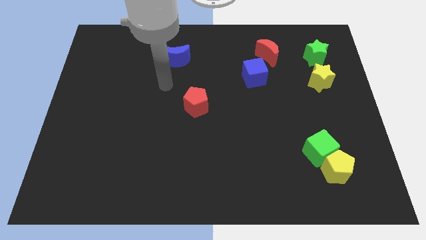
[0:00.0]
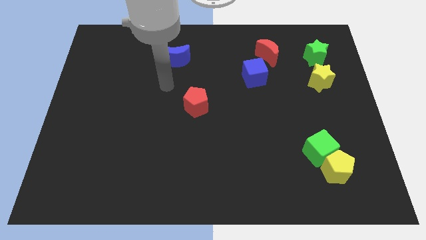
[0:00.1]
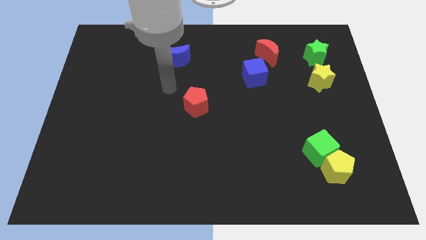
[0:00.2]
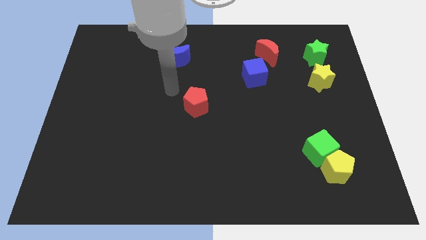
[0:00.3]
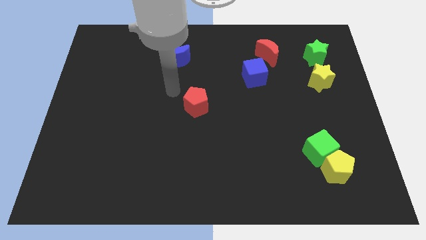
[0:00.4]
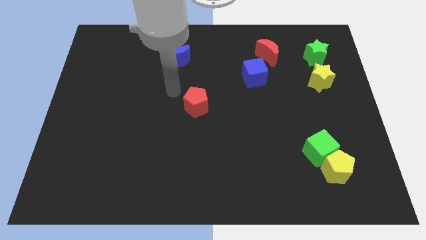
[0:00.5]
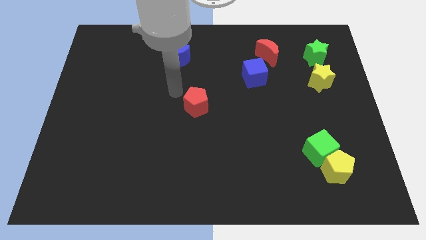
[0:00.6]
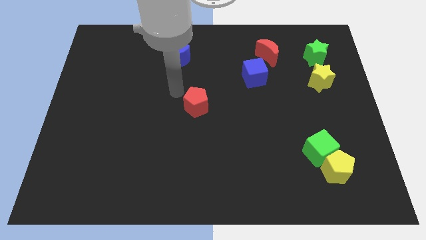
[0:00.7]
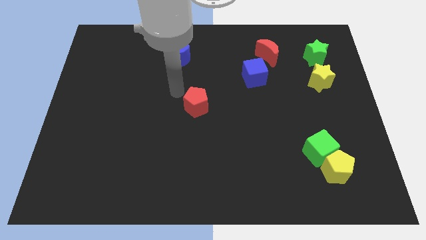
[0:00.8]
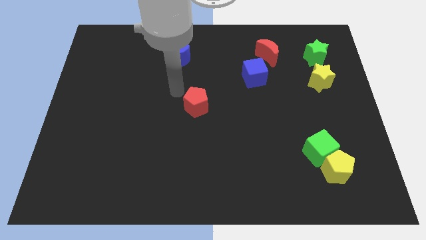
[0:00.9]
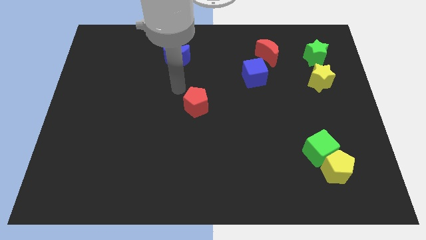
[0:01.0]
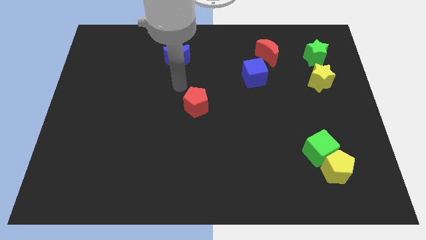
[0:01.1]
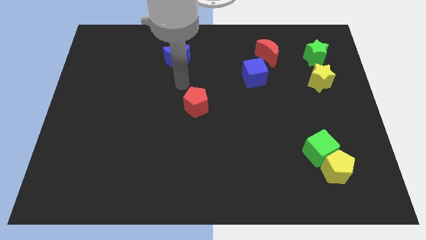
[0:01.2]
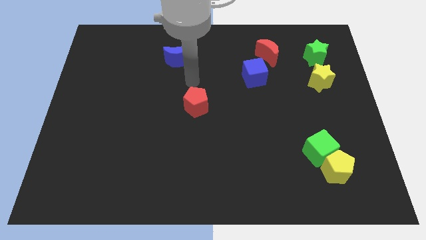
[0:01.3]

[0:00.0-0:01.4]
place your arm above the red pentagon

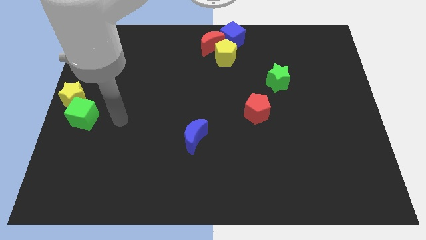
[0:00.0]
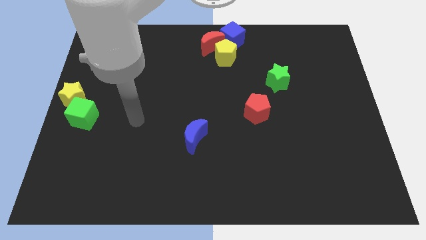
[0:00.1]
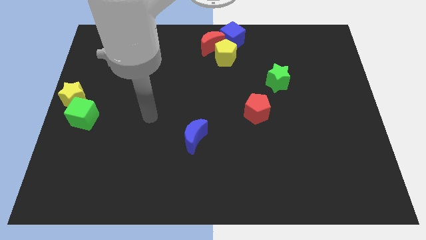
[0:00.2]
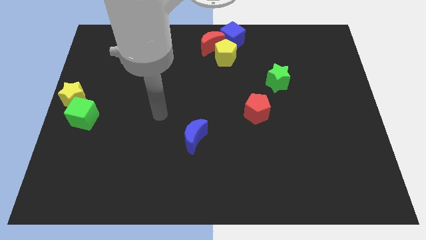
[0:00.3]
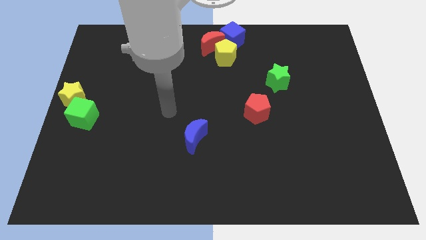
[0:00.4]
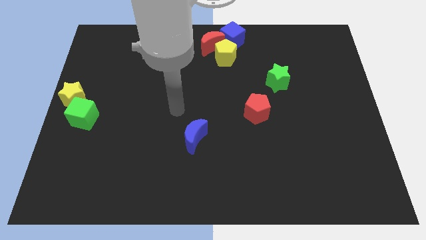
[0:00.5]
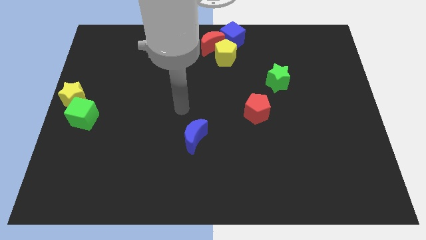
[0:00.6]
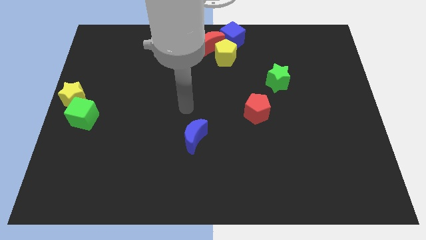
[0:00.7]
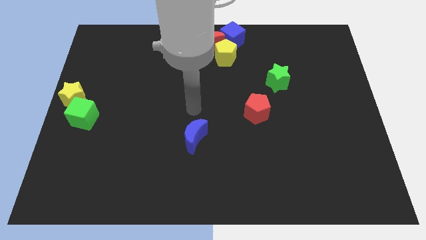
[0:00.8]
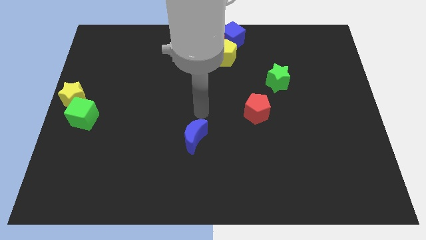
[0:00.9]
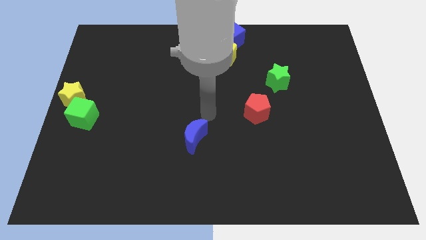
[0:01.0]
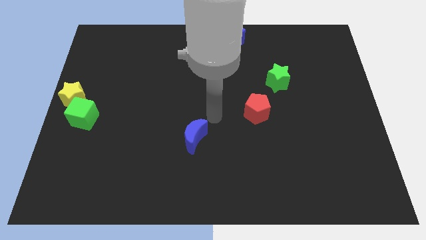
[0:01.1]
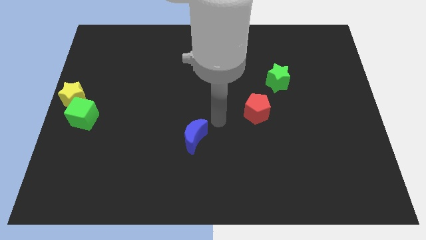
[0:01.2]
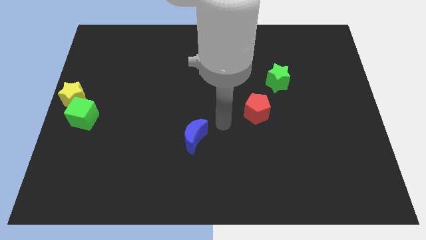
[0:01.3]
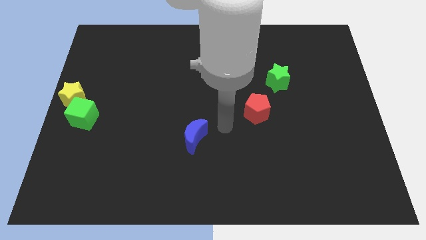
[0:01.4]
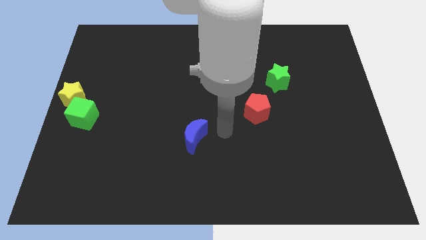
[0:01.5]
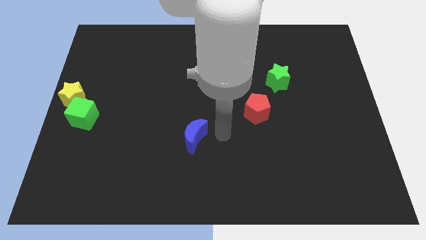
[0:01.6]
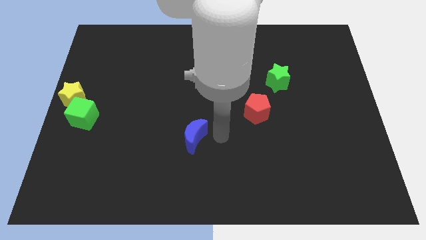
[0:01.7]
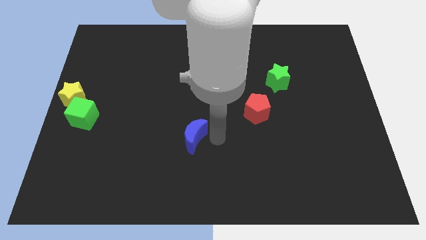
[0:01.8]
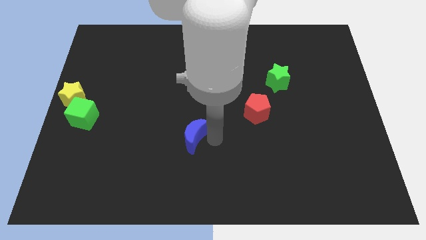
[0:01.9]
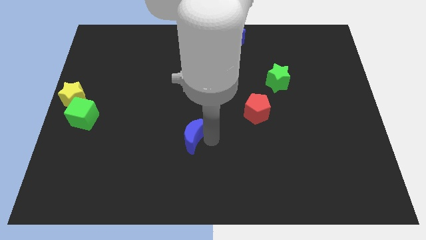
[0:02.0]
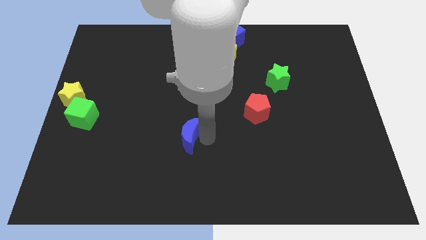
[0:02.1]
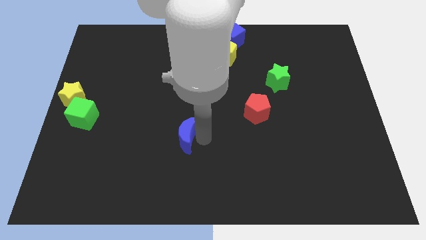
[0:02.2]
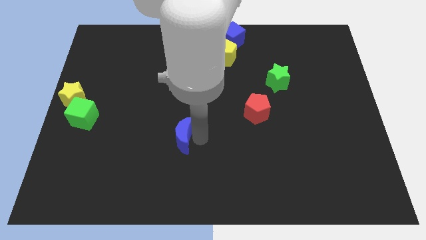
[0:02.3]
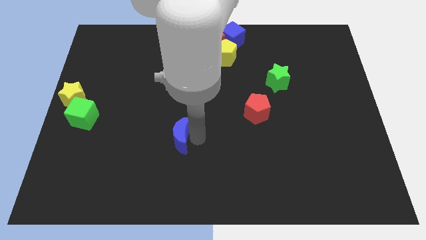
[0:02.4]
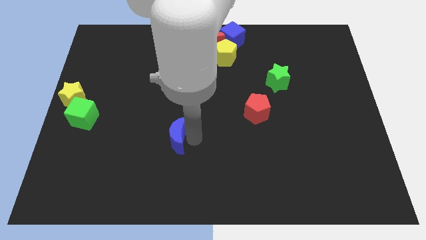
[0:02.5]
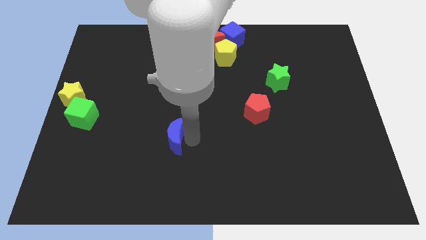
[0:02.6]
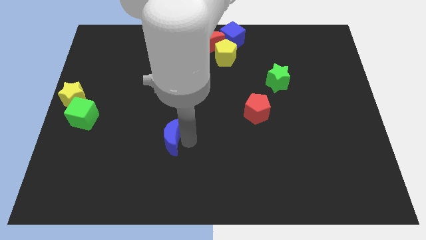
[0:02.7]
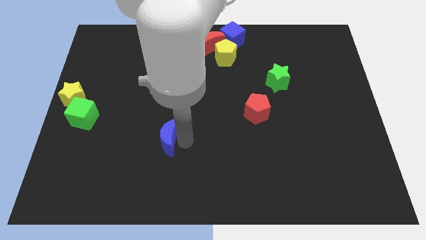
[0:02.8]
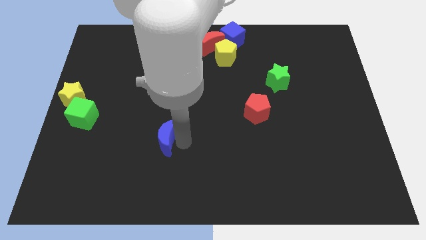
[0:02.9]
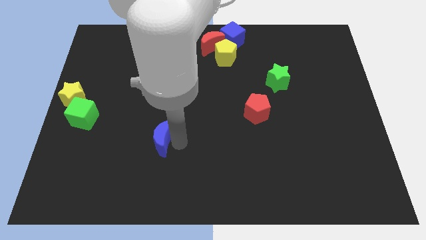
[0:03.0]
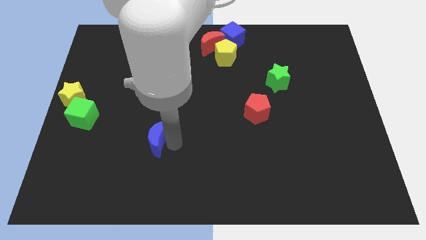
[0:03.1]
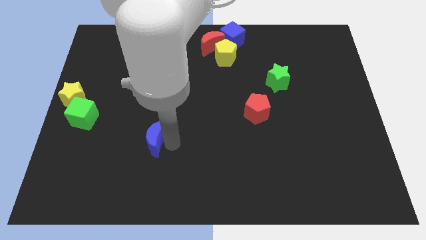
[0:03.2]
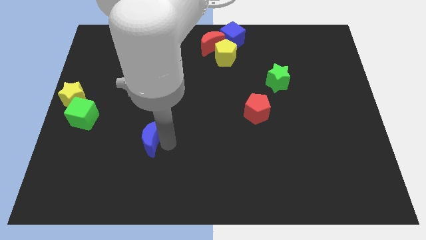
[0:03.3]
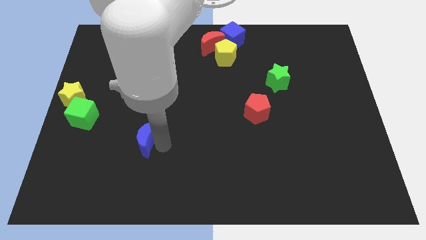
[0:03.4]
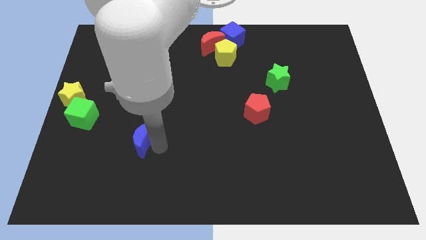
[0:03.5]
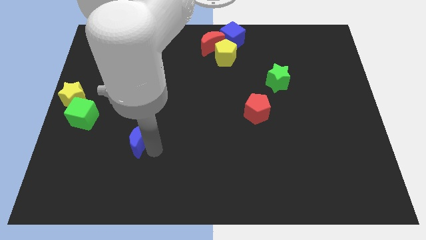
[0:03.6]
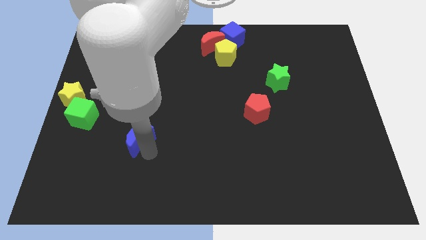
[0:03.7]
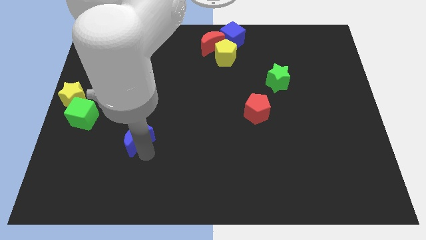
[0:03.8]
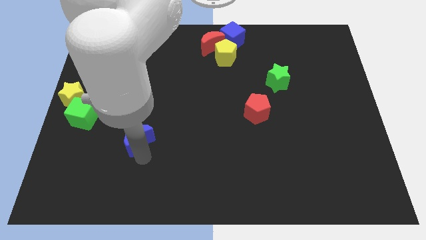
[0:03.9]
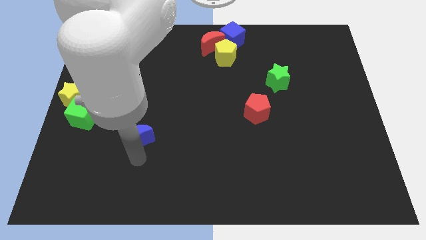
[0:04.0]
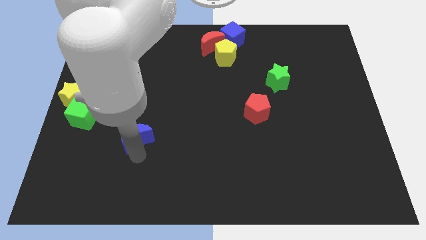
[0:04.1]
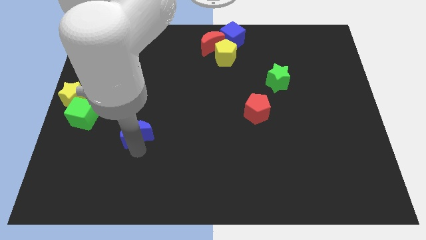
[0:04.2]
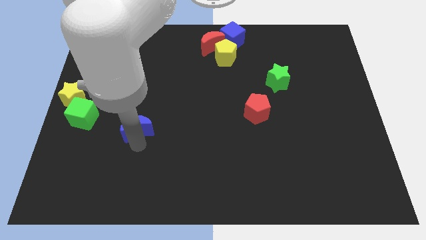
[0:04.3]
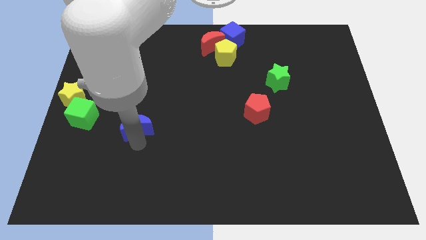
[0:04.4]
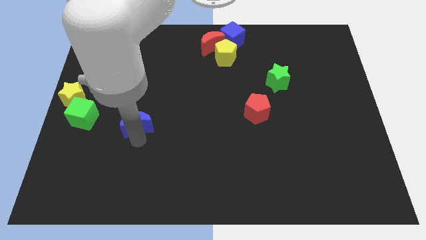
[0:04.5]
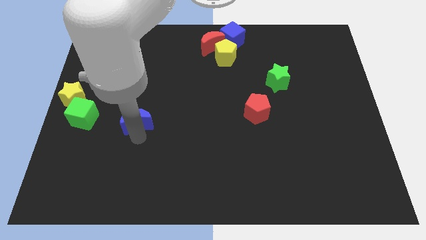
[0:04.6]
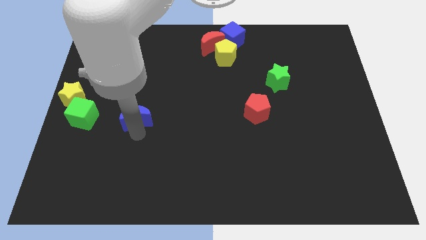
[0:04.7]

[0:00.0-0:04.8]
place the blue moon to the right of the green cube

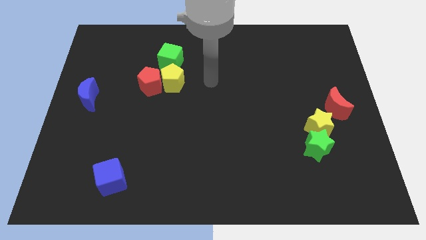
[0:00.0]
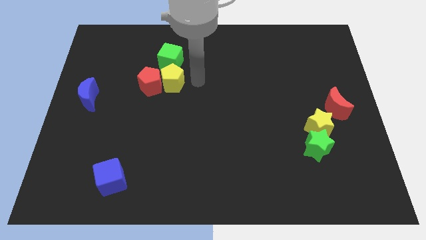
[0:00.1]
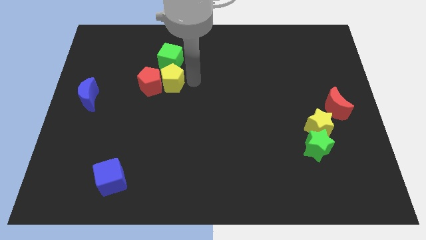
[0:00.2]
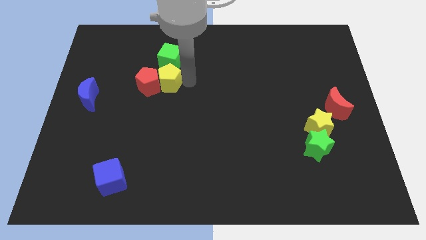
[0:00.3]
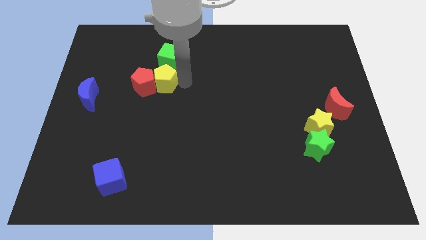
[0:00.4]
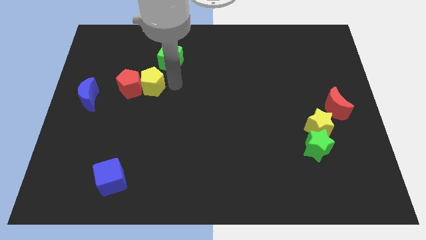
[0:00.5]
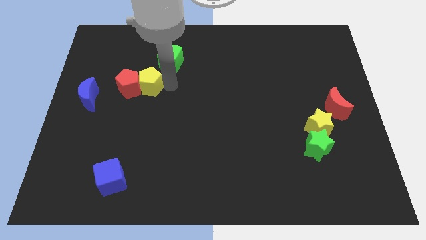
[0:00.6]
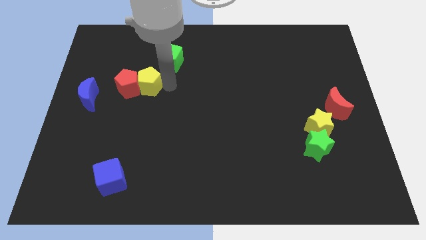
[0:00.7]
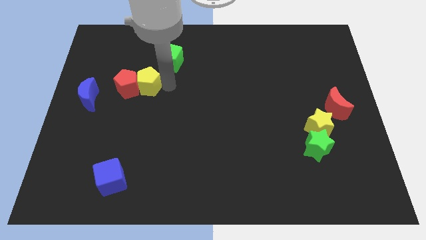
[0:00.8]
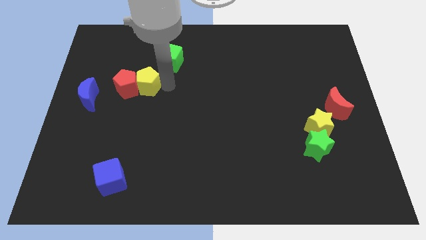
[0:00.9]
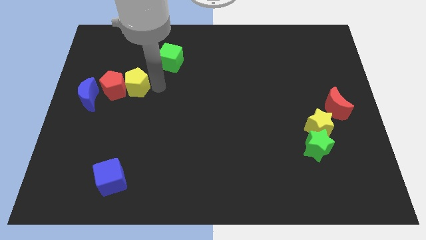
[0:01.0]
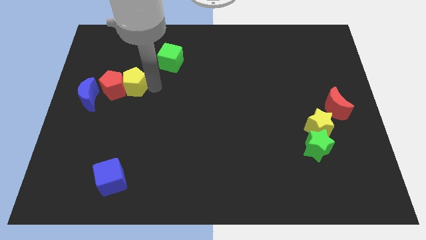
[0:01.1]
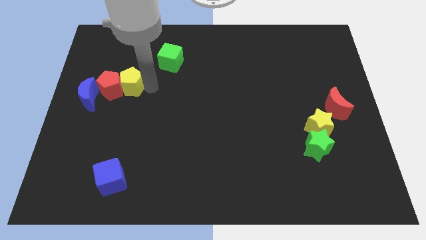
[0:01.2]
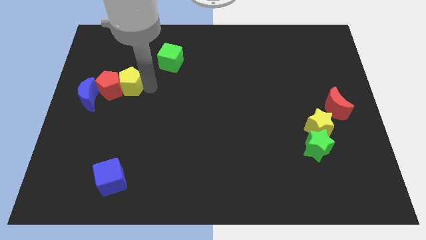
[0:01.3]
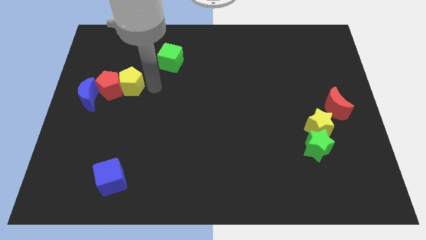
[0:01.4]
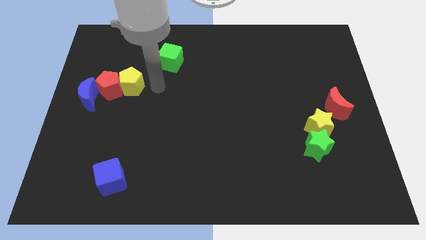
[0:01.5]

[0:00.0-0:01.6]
push red and yellow pentagons into the blue moon

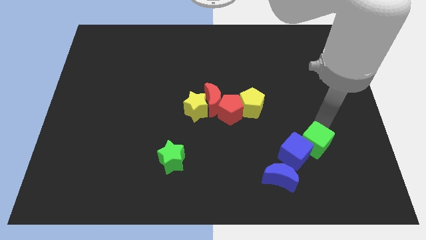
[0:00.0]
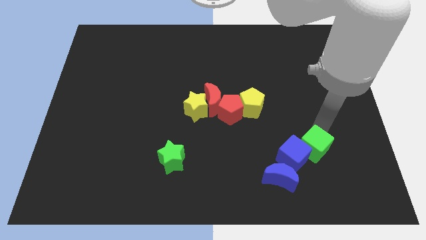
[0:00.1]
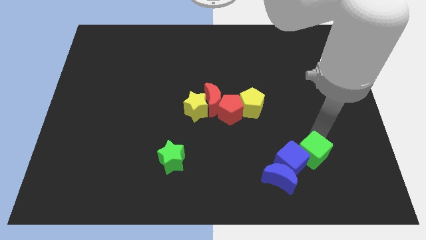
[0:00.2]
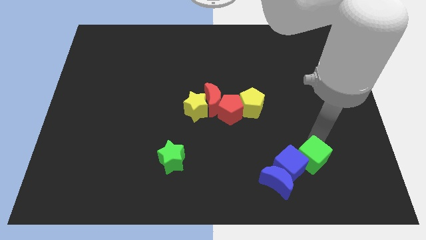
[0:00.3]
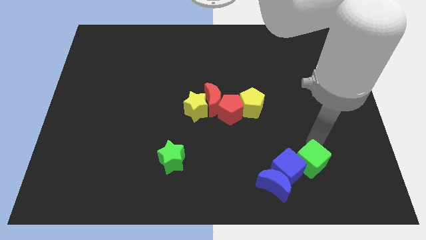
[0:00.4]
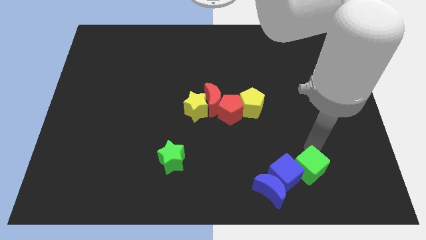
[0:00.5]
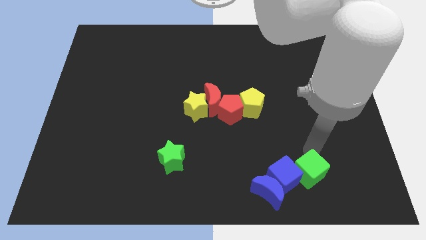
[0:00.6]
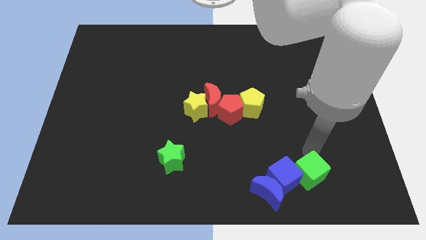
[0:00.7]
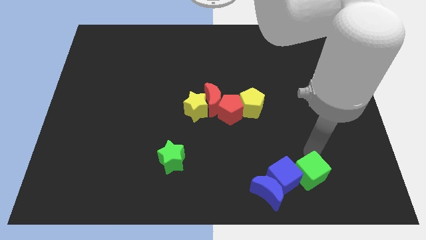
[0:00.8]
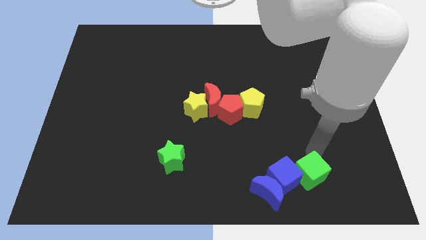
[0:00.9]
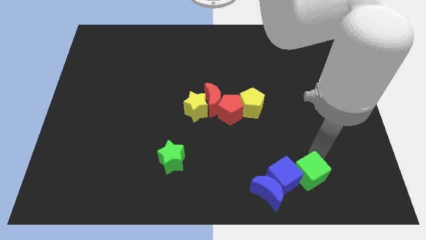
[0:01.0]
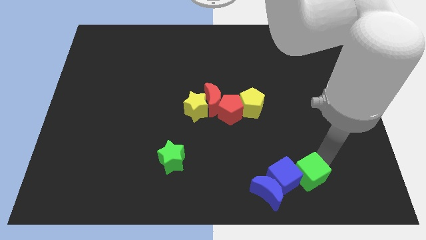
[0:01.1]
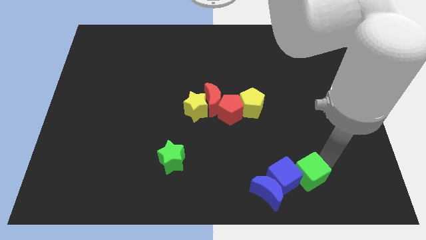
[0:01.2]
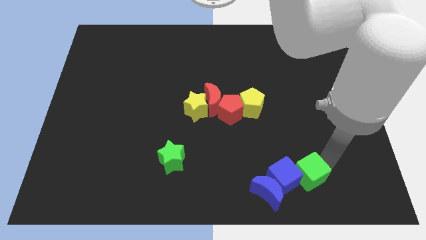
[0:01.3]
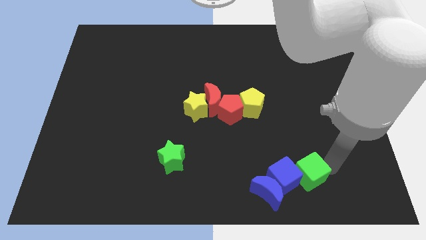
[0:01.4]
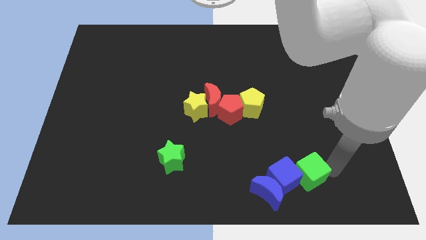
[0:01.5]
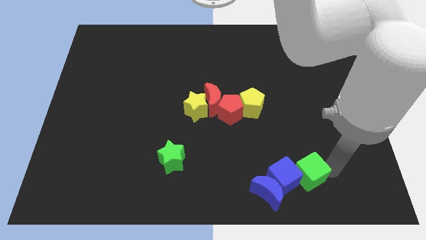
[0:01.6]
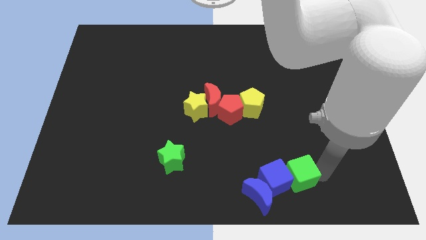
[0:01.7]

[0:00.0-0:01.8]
move the green cube into the blue cube
